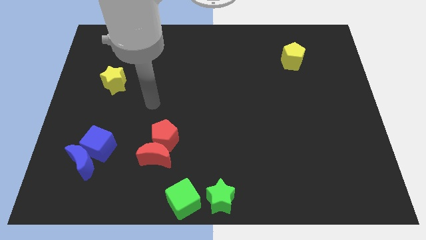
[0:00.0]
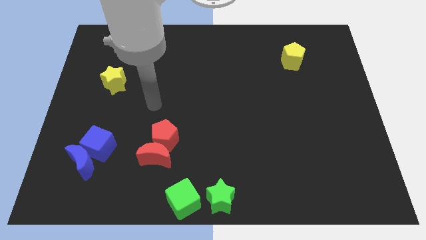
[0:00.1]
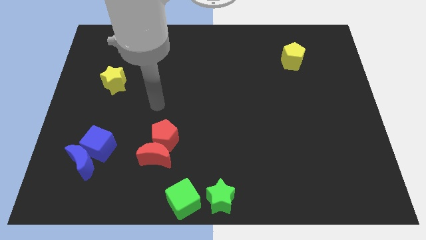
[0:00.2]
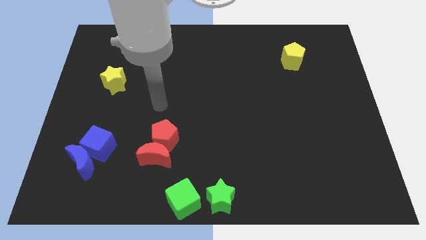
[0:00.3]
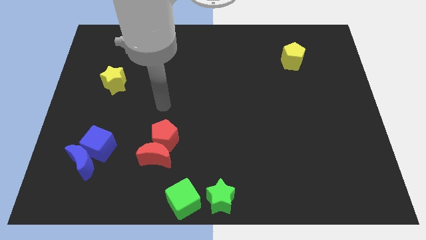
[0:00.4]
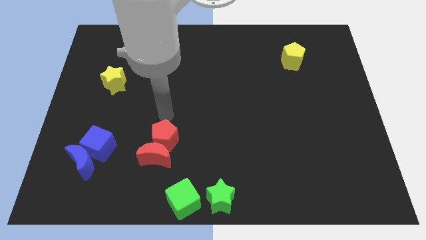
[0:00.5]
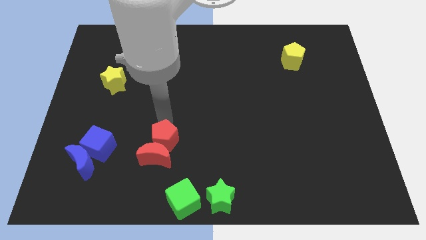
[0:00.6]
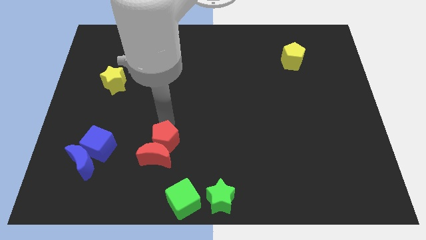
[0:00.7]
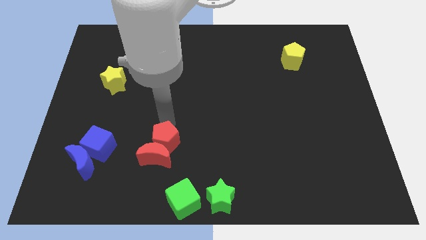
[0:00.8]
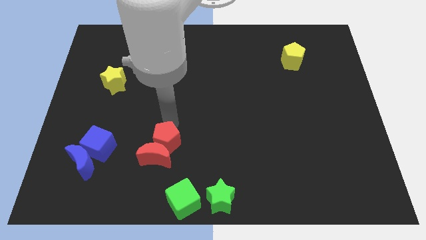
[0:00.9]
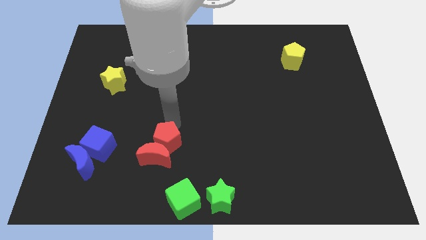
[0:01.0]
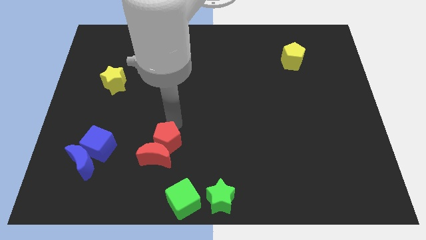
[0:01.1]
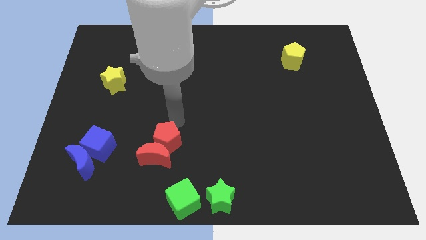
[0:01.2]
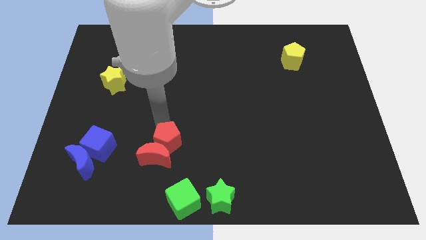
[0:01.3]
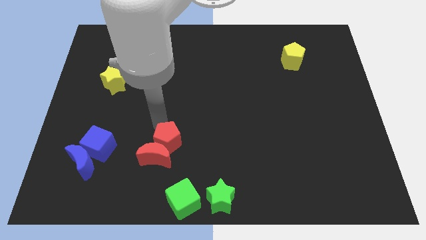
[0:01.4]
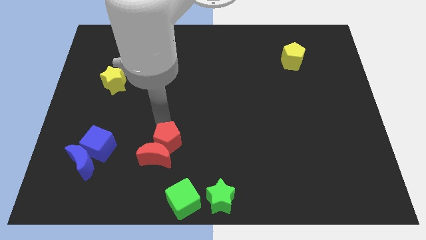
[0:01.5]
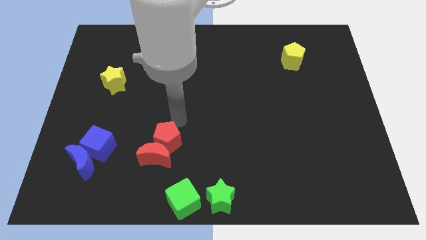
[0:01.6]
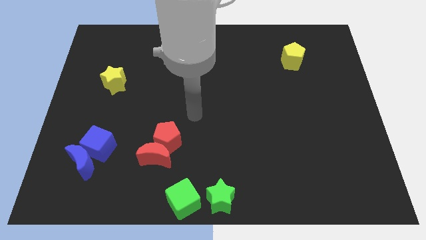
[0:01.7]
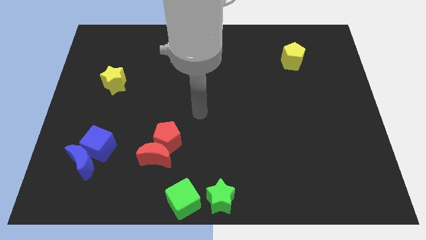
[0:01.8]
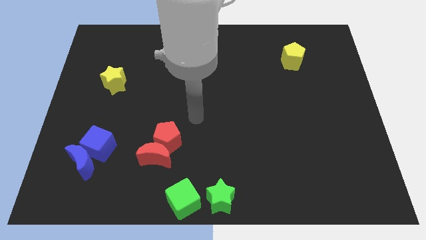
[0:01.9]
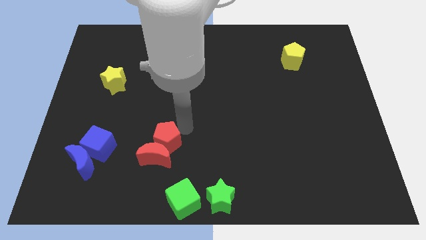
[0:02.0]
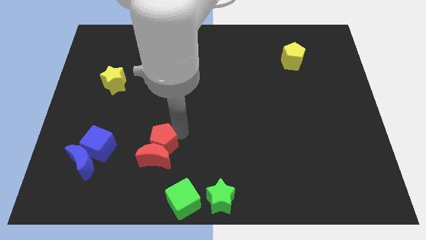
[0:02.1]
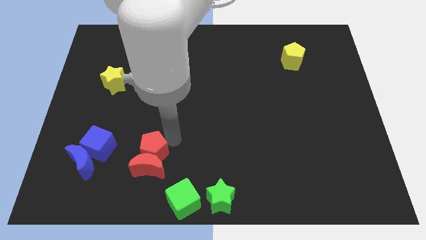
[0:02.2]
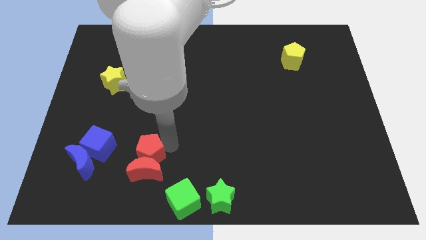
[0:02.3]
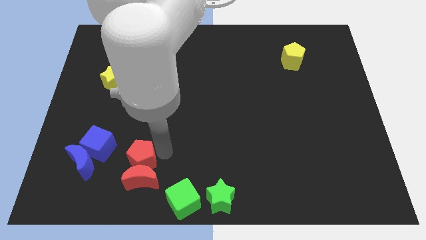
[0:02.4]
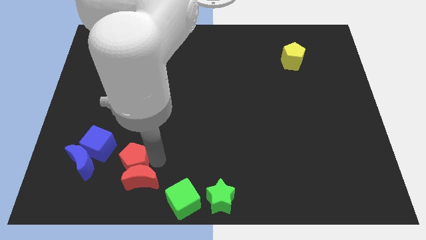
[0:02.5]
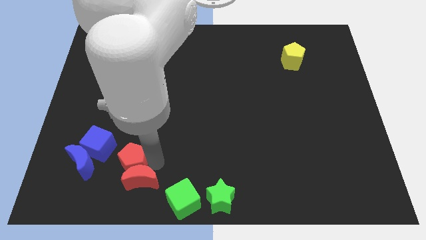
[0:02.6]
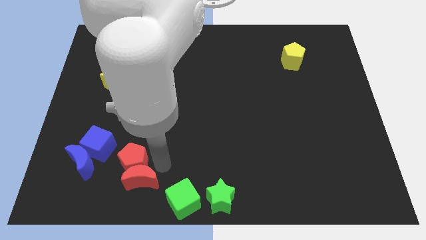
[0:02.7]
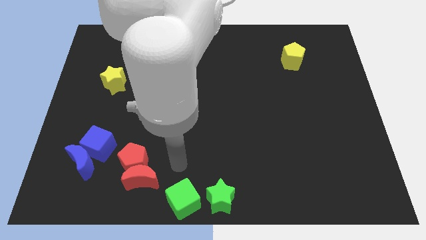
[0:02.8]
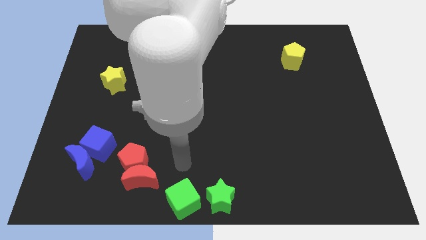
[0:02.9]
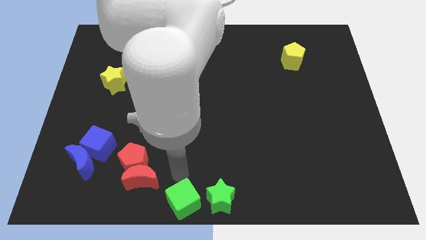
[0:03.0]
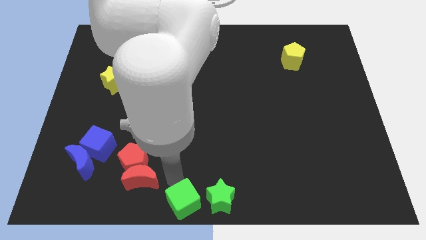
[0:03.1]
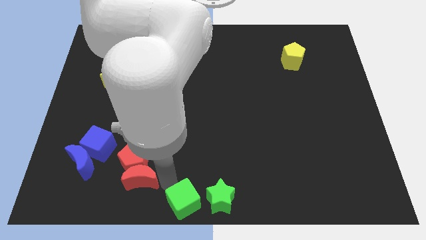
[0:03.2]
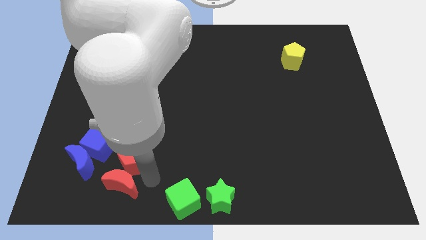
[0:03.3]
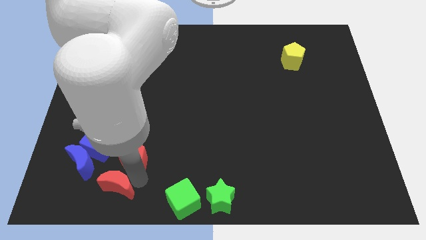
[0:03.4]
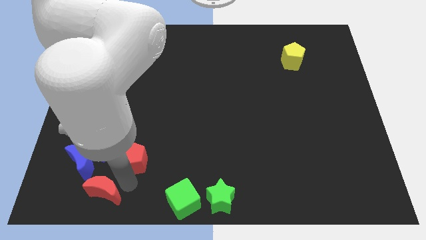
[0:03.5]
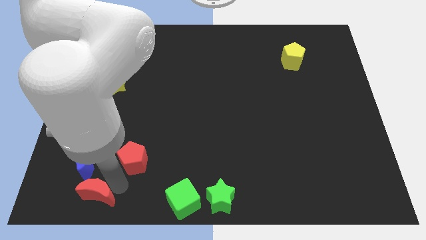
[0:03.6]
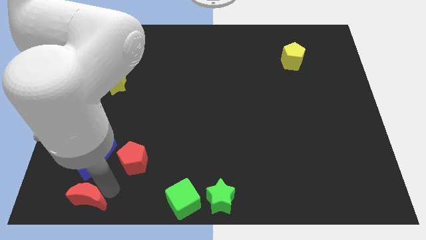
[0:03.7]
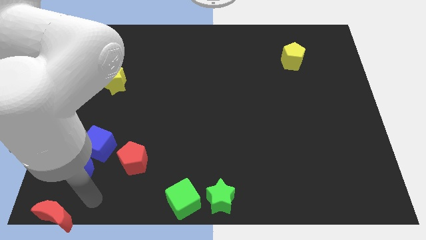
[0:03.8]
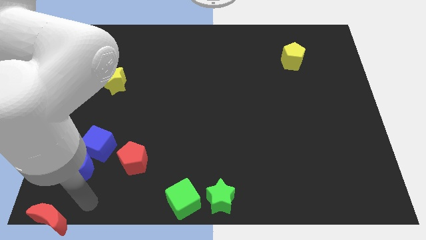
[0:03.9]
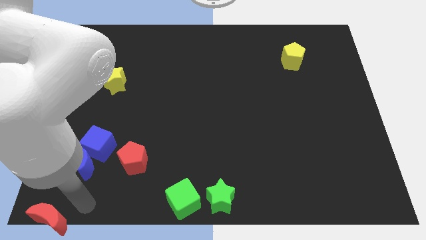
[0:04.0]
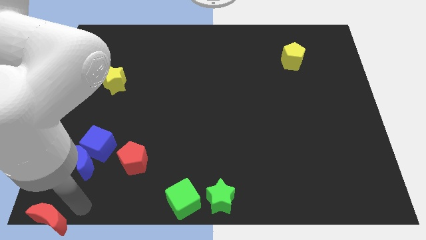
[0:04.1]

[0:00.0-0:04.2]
drag the red crescent diagonally to red pentagon

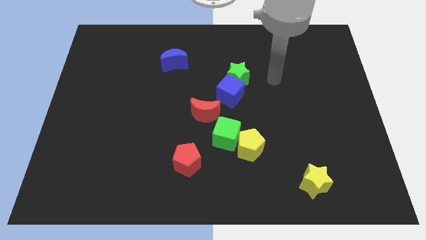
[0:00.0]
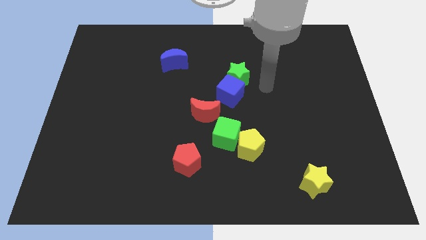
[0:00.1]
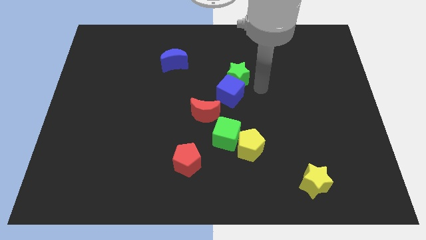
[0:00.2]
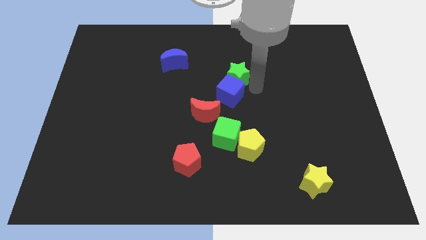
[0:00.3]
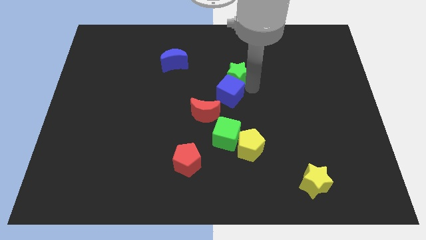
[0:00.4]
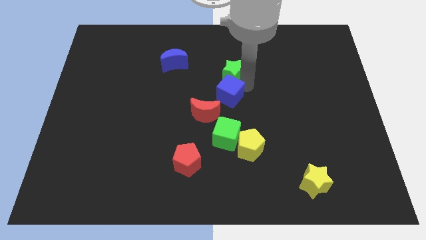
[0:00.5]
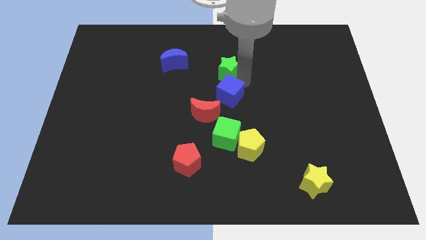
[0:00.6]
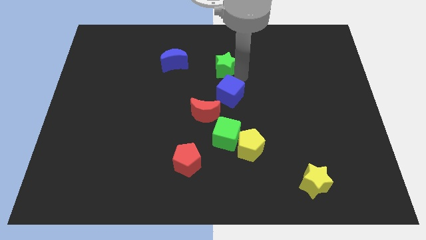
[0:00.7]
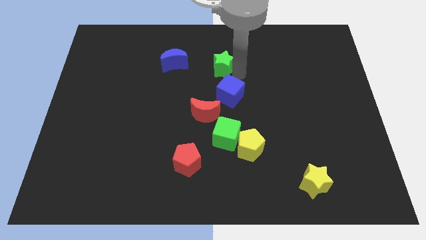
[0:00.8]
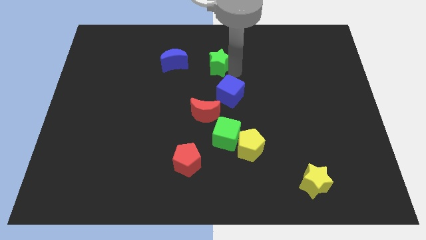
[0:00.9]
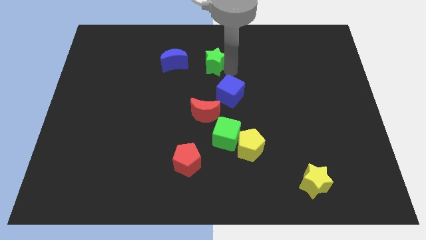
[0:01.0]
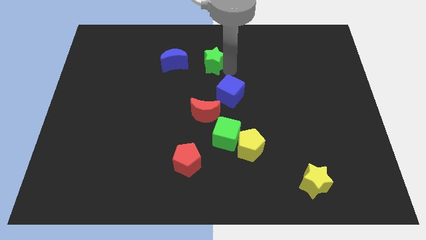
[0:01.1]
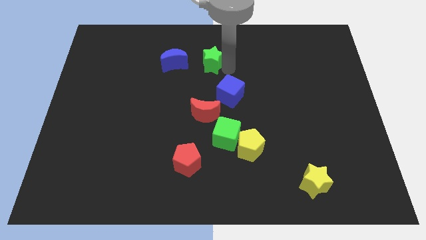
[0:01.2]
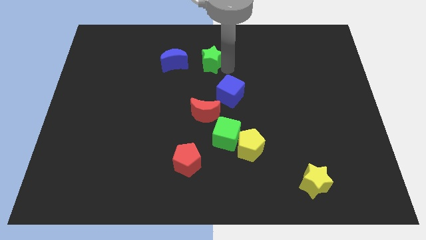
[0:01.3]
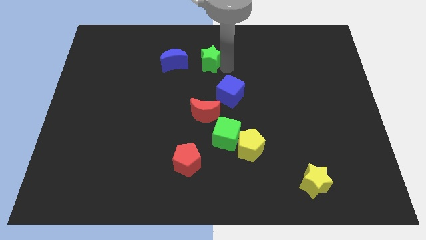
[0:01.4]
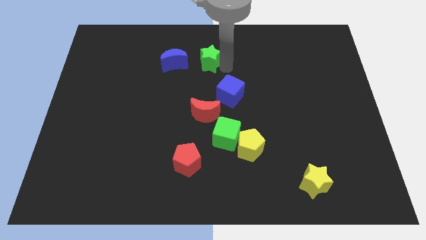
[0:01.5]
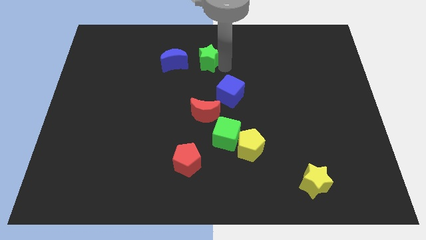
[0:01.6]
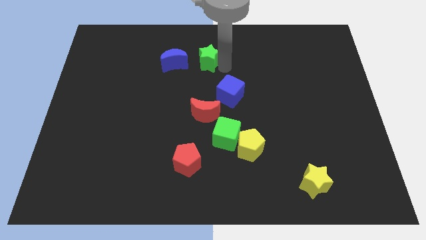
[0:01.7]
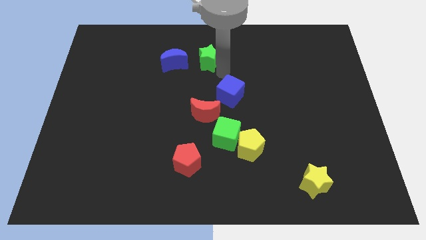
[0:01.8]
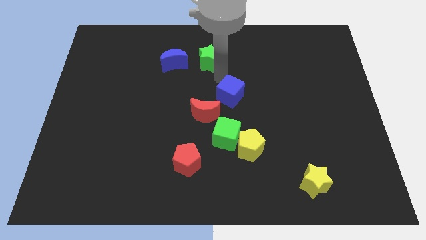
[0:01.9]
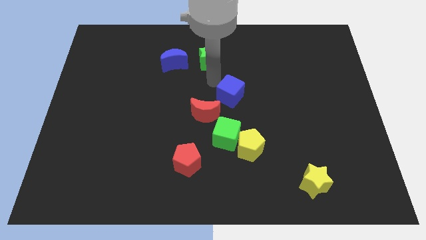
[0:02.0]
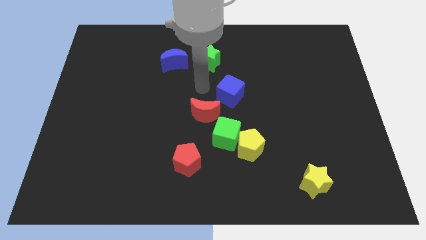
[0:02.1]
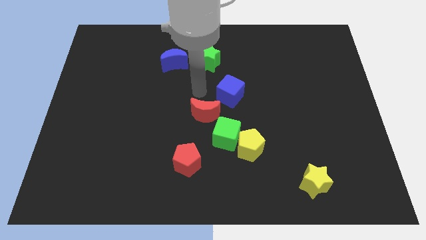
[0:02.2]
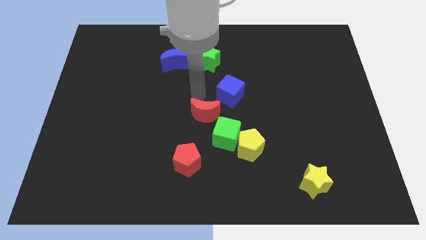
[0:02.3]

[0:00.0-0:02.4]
place the green star to the right of the blue moon

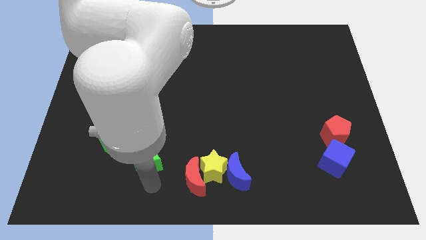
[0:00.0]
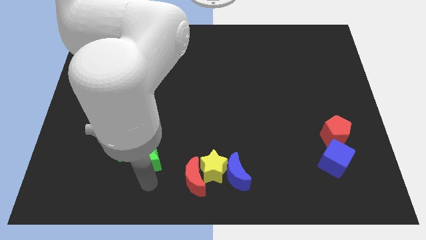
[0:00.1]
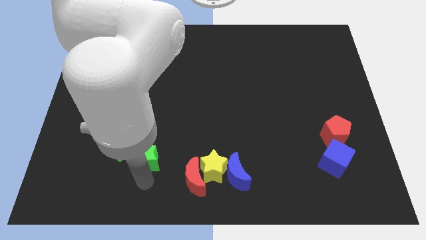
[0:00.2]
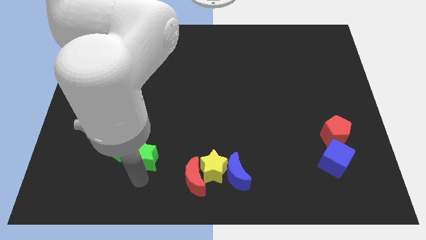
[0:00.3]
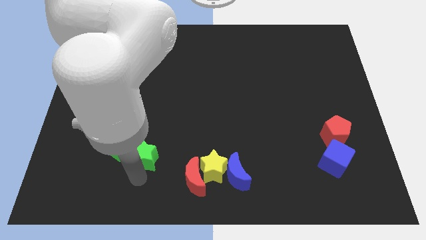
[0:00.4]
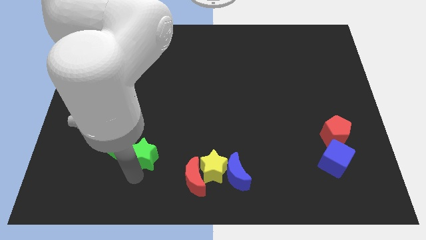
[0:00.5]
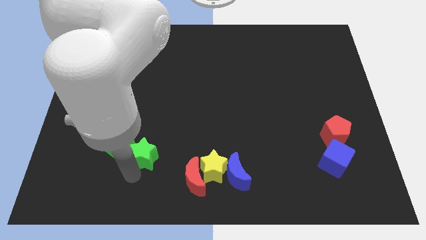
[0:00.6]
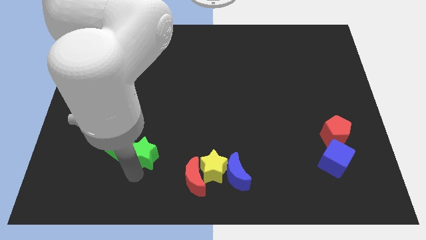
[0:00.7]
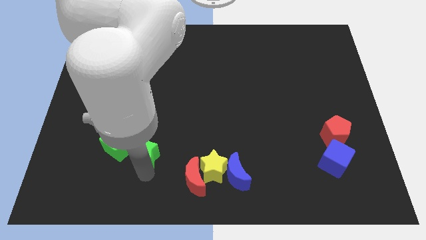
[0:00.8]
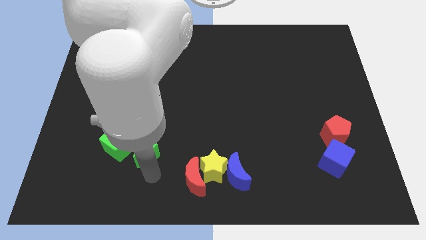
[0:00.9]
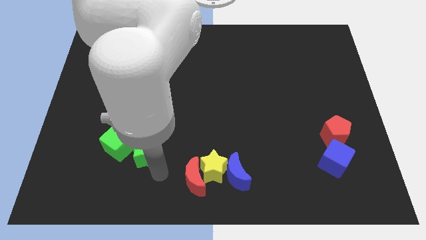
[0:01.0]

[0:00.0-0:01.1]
place the green star to the right side green cube

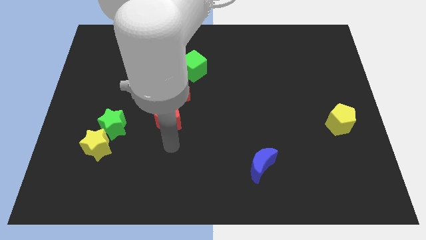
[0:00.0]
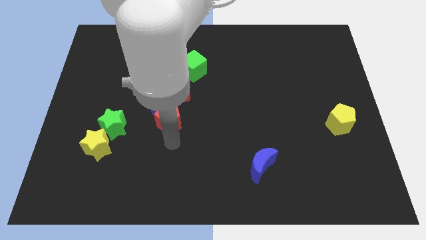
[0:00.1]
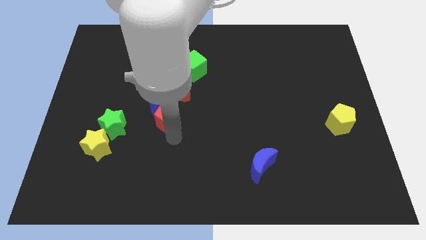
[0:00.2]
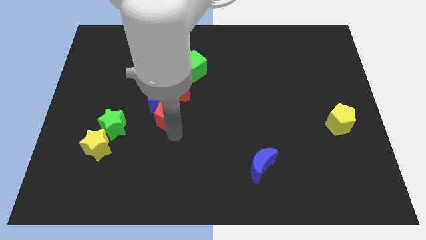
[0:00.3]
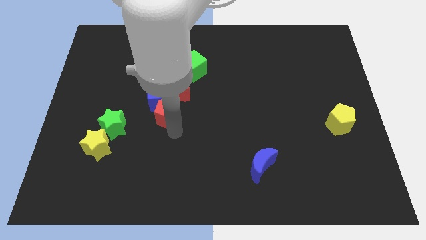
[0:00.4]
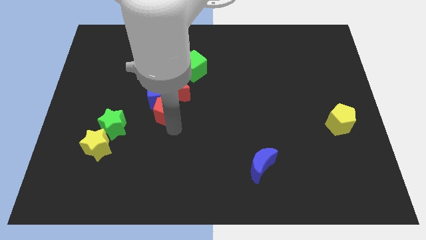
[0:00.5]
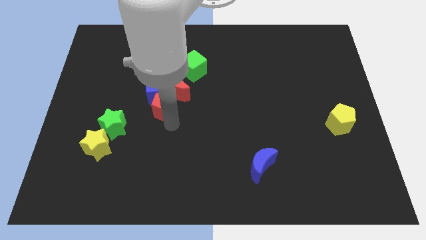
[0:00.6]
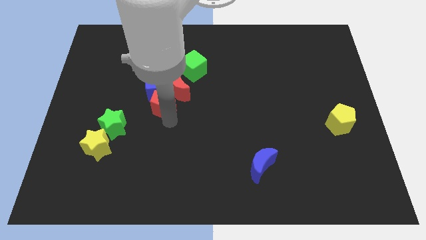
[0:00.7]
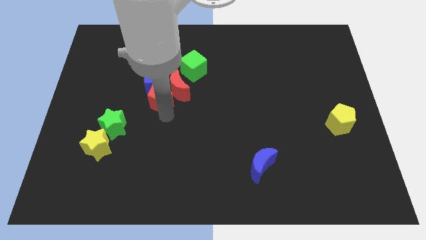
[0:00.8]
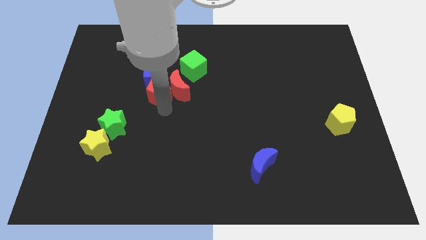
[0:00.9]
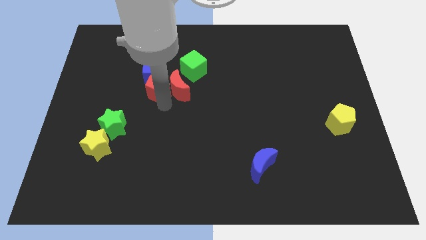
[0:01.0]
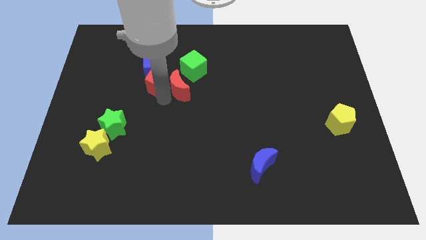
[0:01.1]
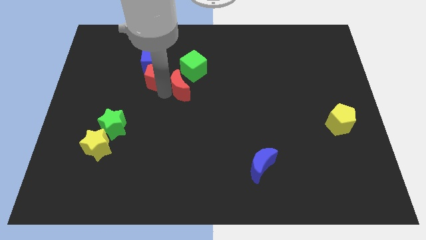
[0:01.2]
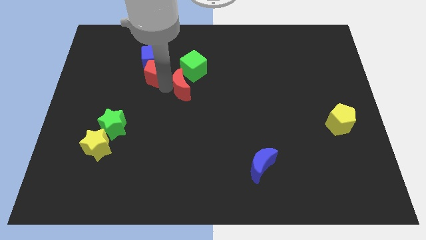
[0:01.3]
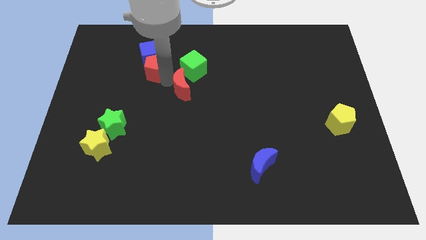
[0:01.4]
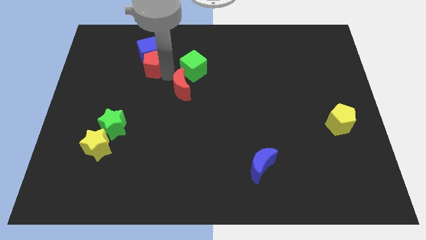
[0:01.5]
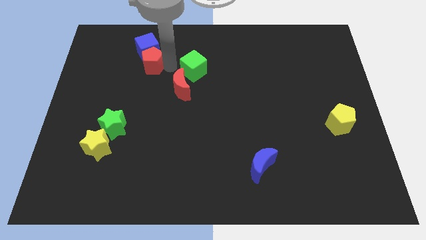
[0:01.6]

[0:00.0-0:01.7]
move the red pentagon along with blue cube to the top of the board
